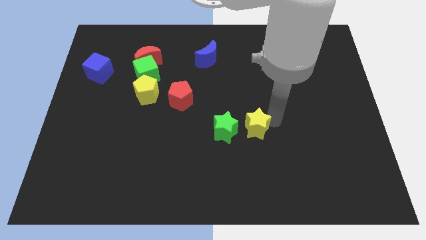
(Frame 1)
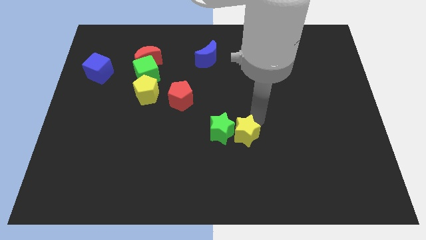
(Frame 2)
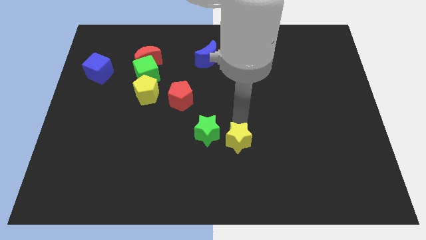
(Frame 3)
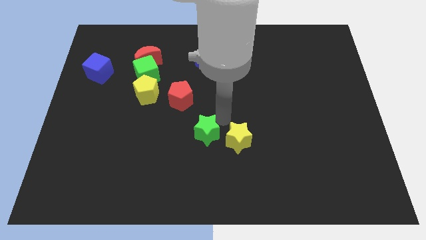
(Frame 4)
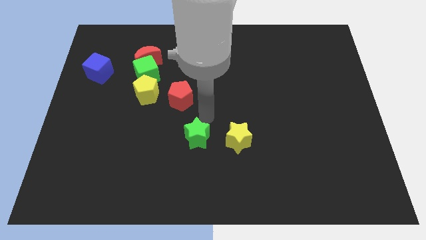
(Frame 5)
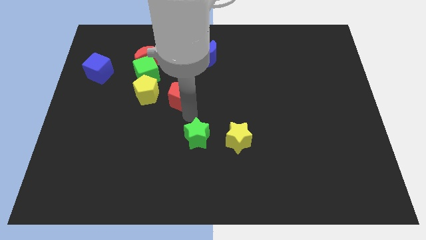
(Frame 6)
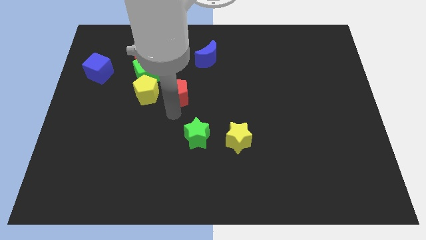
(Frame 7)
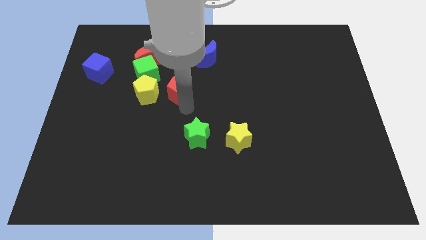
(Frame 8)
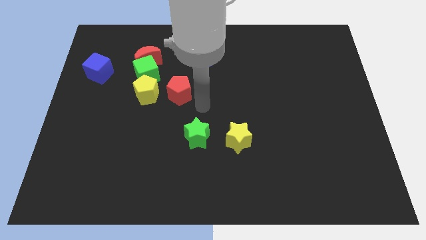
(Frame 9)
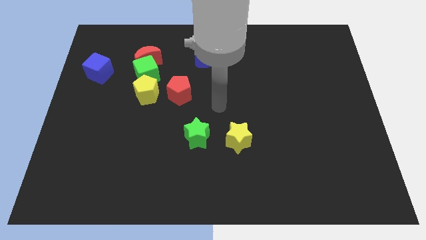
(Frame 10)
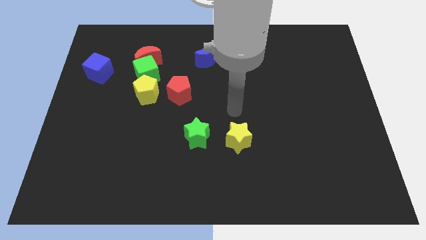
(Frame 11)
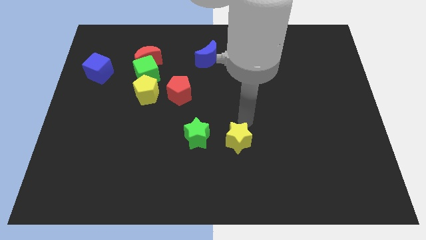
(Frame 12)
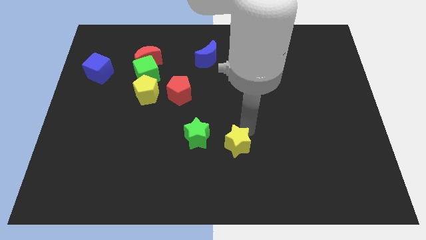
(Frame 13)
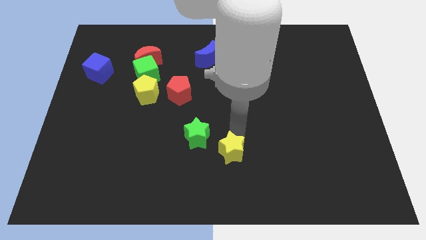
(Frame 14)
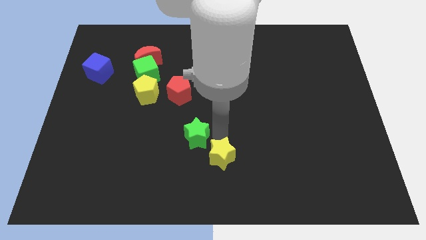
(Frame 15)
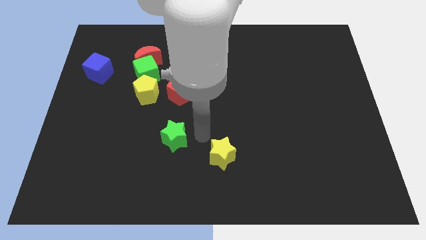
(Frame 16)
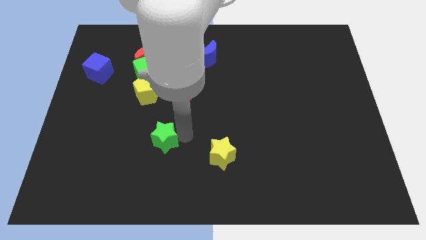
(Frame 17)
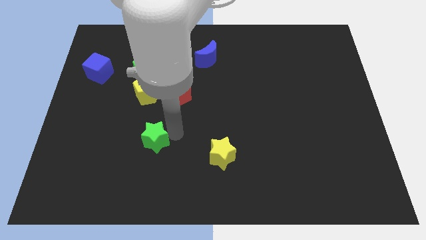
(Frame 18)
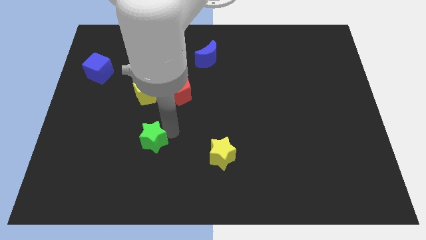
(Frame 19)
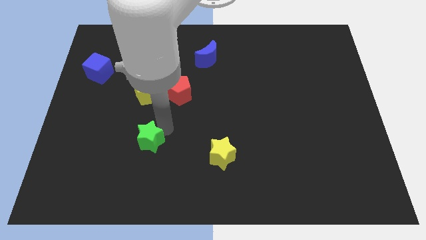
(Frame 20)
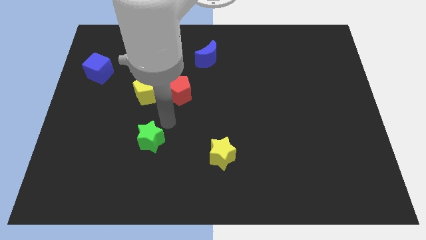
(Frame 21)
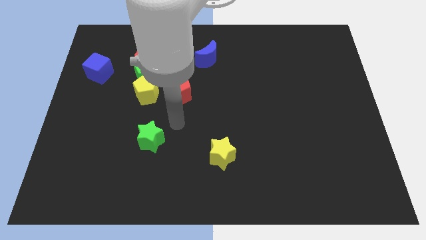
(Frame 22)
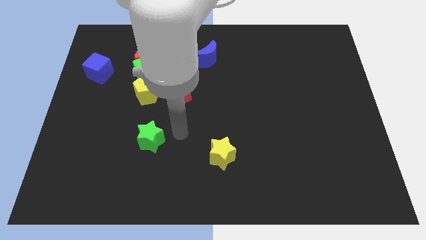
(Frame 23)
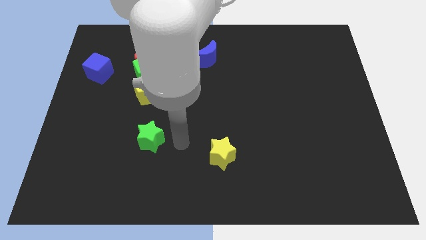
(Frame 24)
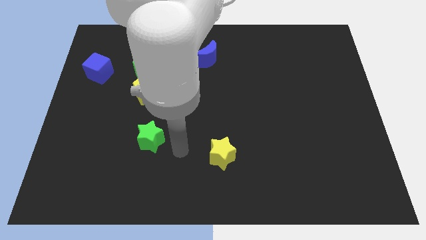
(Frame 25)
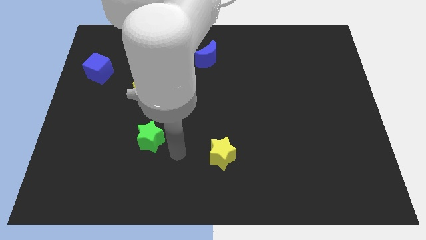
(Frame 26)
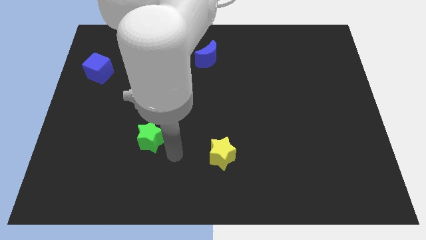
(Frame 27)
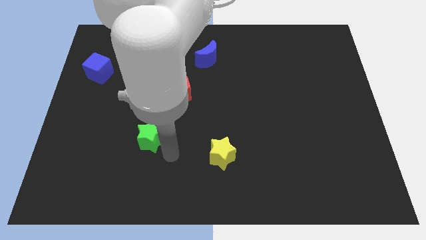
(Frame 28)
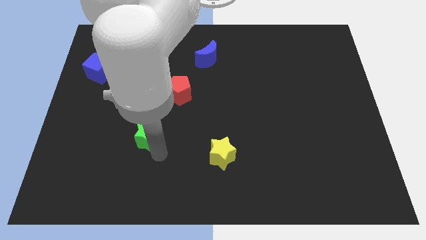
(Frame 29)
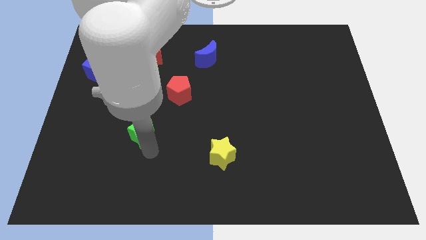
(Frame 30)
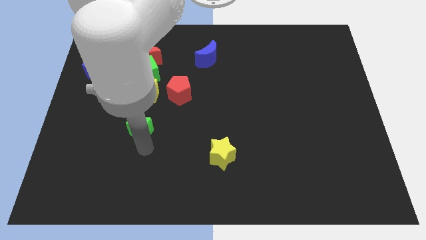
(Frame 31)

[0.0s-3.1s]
separate yellow and green stars

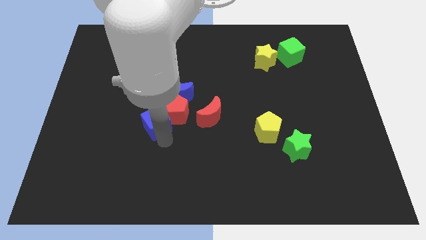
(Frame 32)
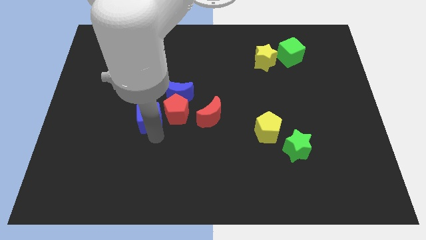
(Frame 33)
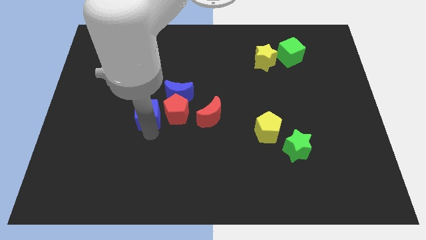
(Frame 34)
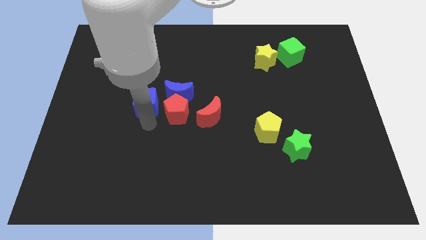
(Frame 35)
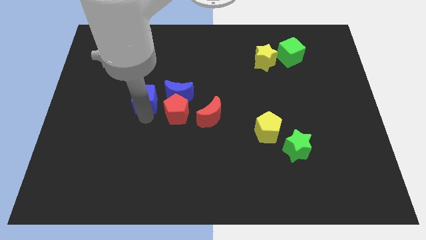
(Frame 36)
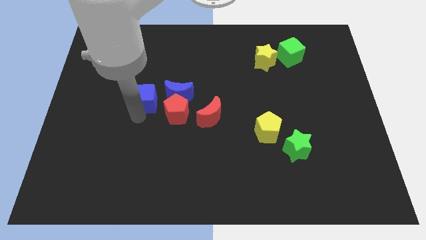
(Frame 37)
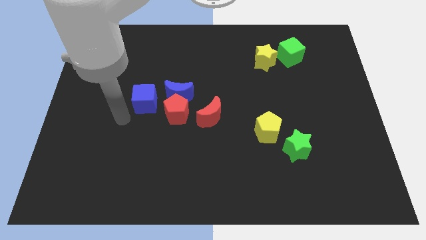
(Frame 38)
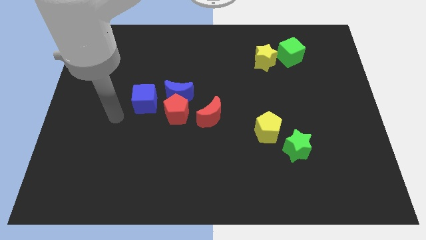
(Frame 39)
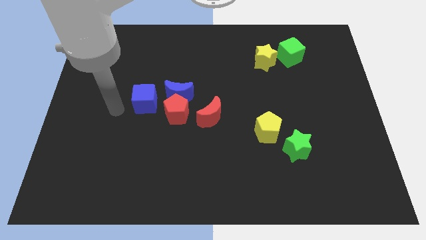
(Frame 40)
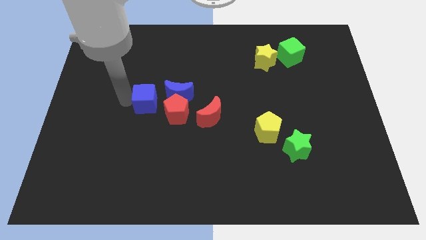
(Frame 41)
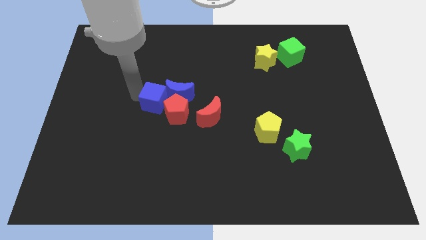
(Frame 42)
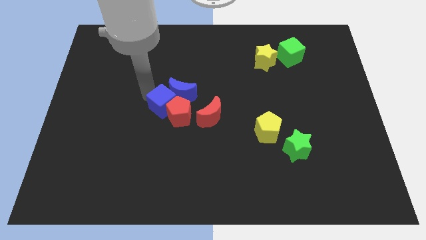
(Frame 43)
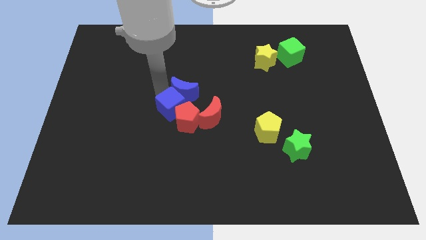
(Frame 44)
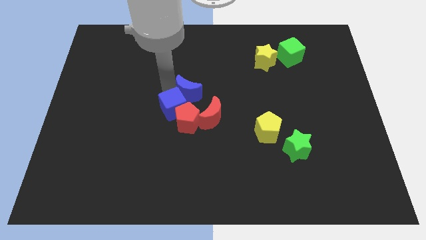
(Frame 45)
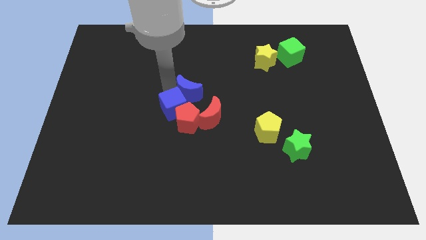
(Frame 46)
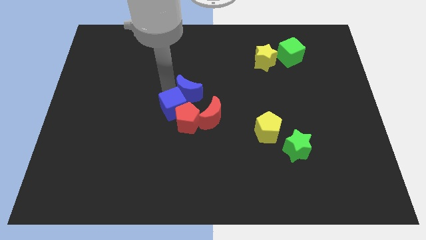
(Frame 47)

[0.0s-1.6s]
move blue cube to the top of the red pentagon

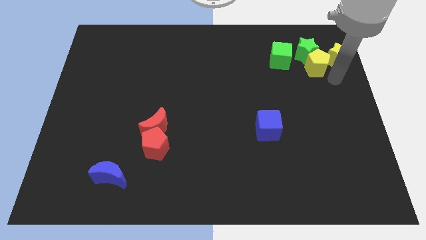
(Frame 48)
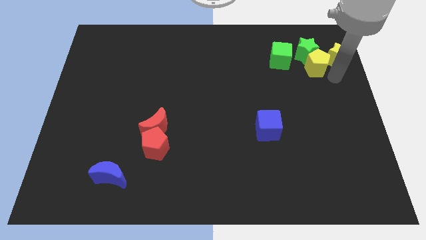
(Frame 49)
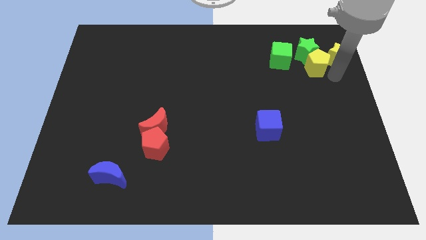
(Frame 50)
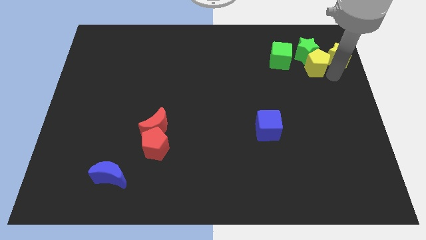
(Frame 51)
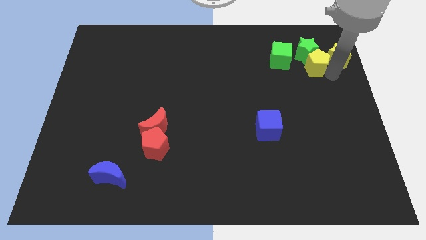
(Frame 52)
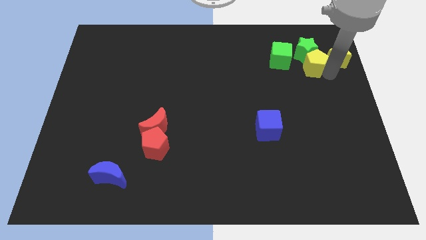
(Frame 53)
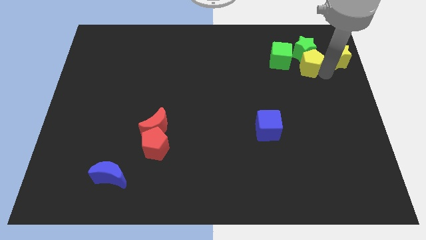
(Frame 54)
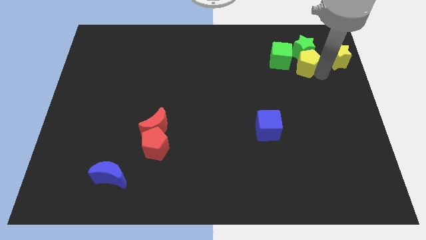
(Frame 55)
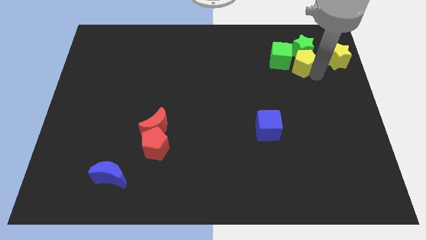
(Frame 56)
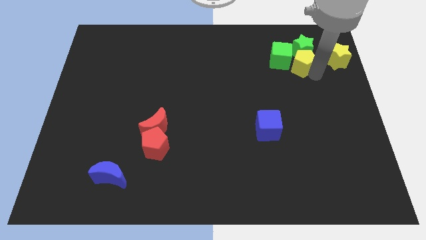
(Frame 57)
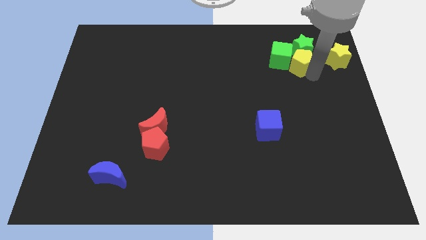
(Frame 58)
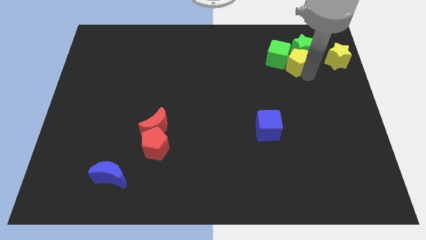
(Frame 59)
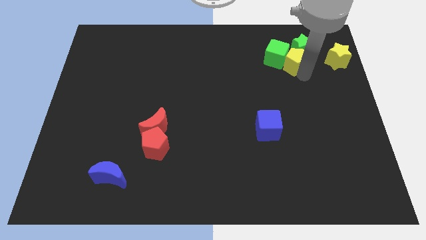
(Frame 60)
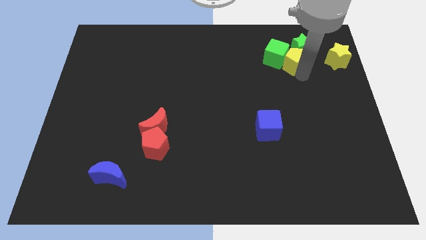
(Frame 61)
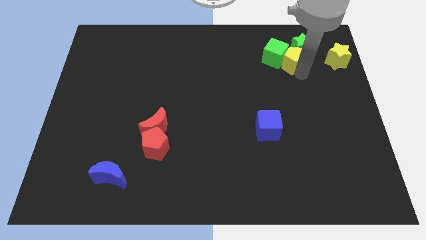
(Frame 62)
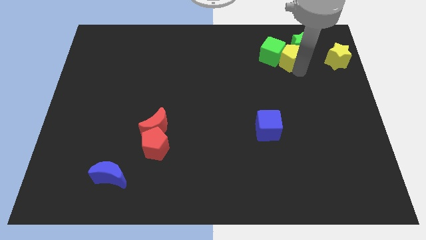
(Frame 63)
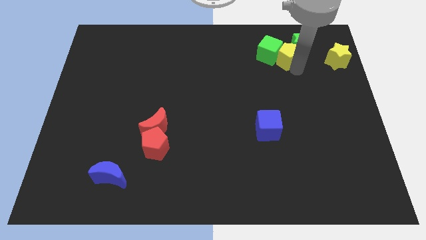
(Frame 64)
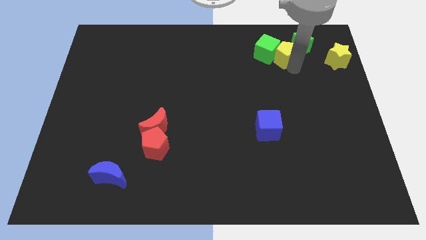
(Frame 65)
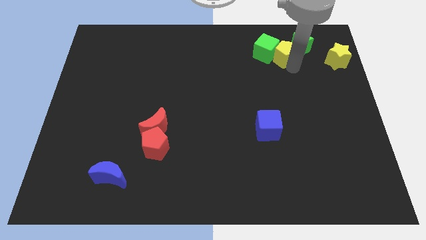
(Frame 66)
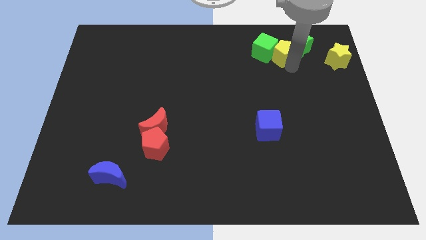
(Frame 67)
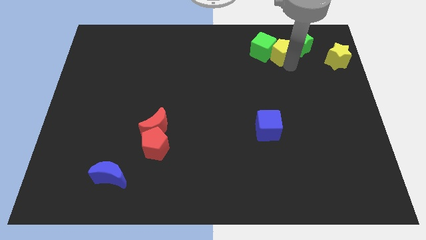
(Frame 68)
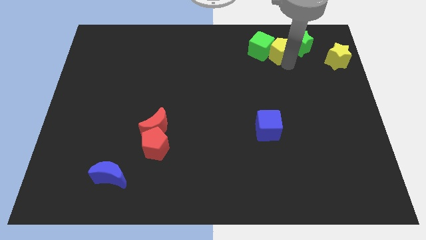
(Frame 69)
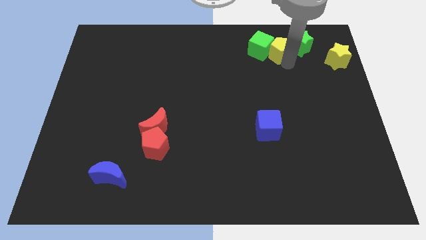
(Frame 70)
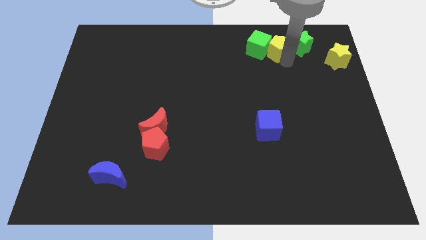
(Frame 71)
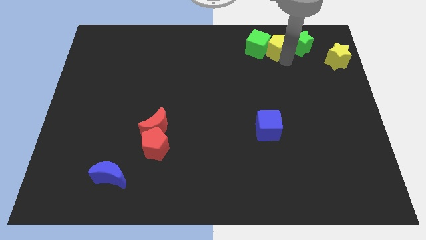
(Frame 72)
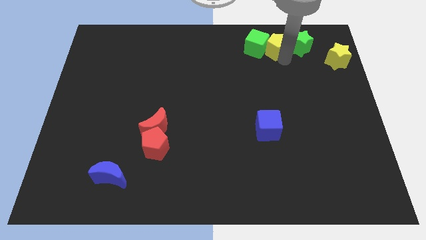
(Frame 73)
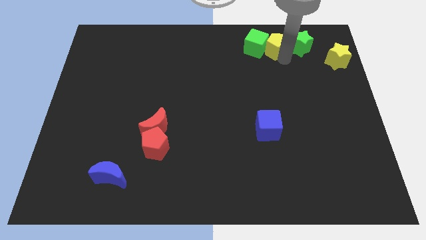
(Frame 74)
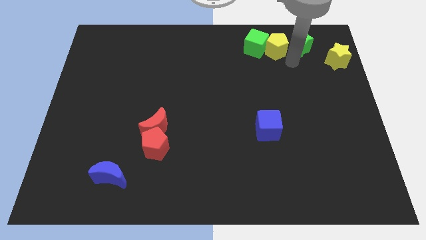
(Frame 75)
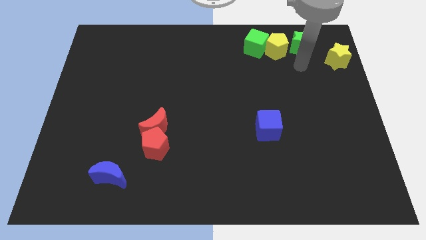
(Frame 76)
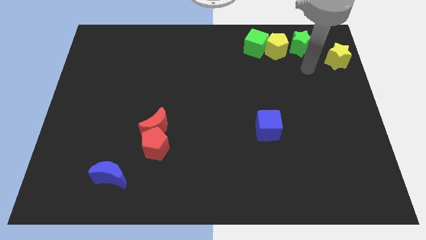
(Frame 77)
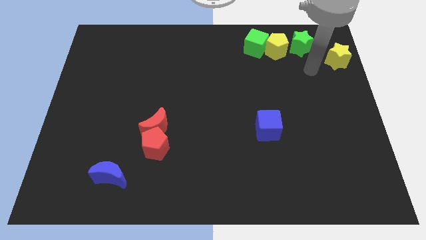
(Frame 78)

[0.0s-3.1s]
place yellow pentagon in between the green blocks

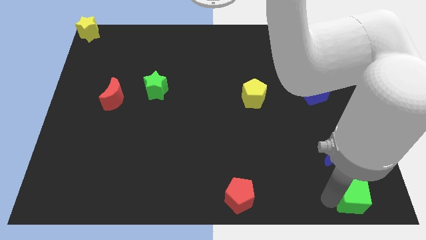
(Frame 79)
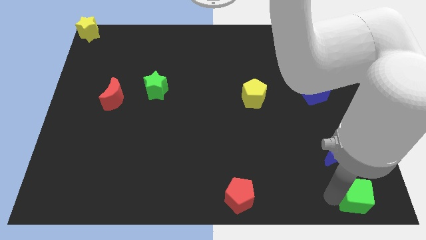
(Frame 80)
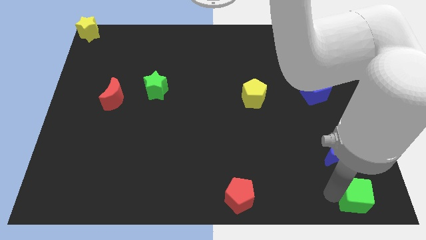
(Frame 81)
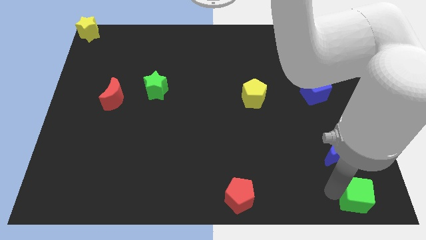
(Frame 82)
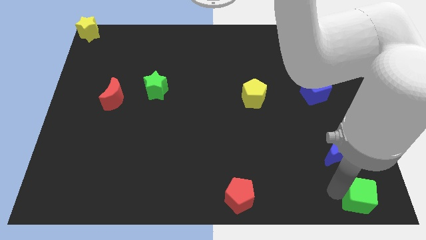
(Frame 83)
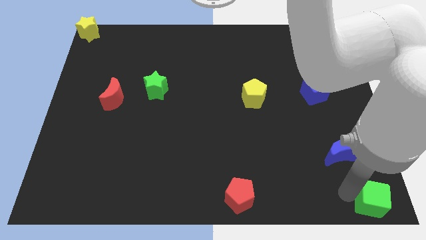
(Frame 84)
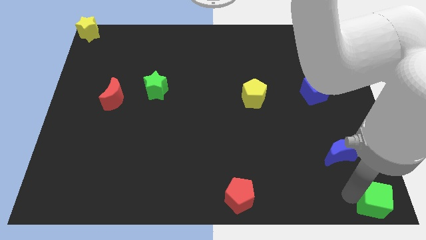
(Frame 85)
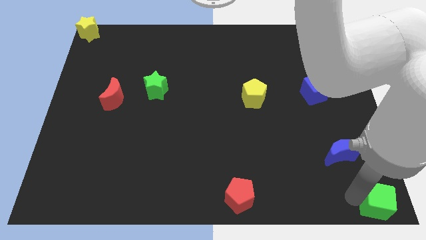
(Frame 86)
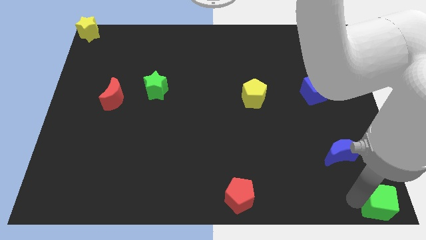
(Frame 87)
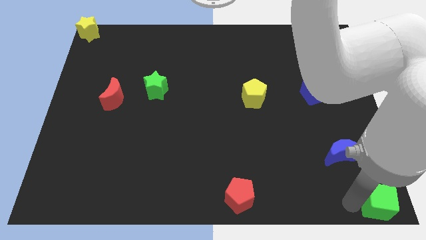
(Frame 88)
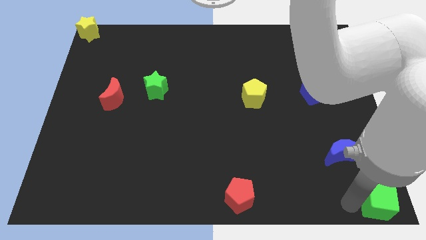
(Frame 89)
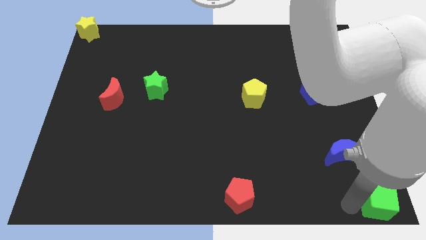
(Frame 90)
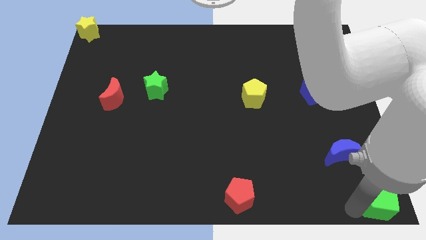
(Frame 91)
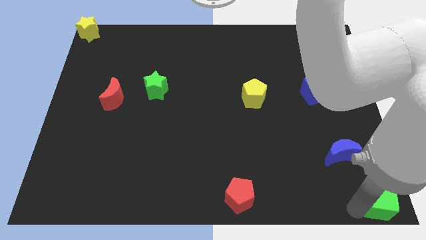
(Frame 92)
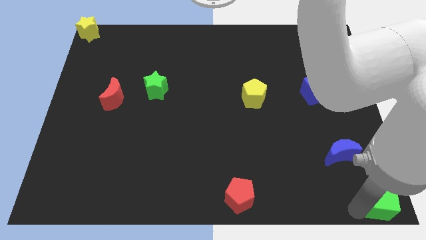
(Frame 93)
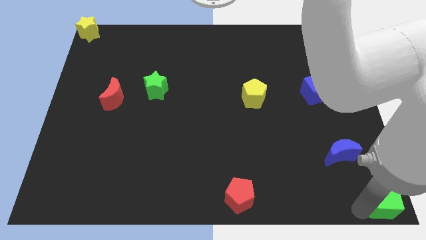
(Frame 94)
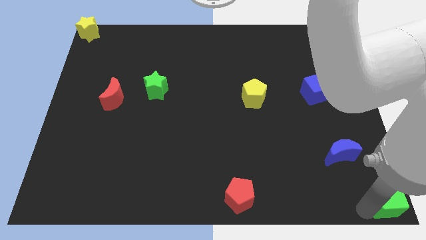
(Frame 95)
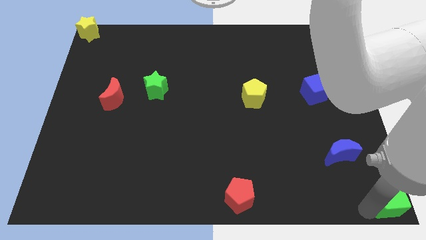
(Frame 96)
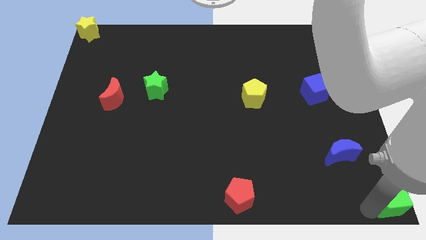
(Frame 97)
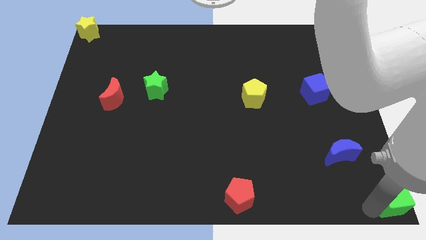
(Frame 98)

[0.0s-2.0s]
place the green cube at the bottom right corner of the board
